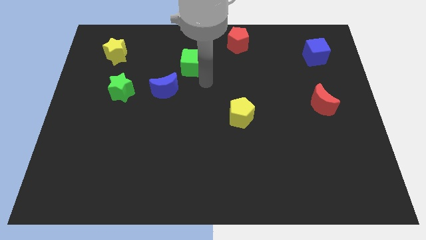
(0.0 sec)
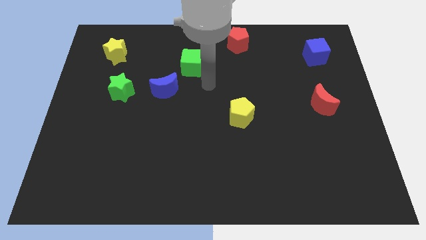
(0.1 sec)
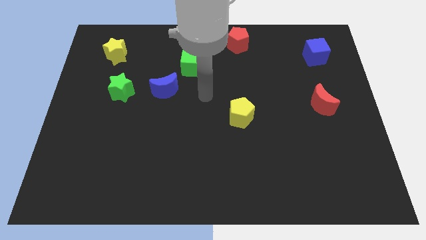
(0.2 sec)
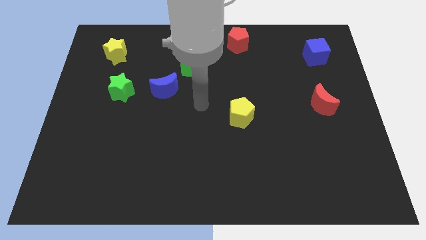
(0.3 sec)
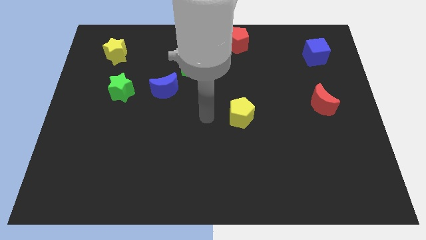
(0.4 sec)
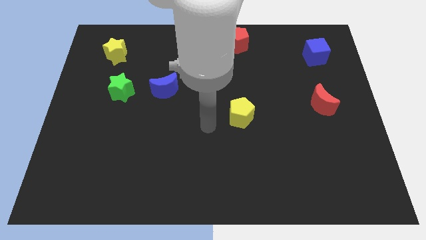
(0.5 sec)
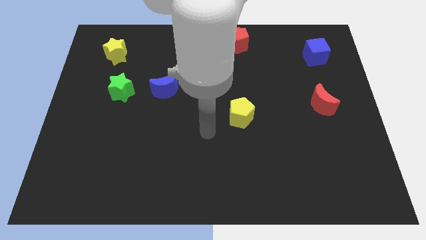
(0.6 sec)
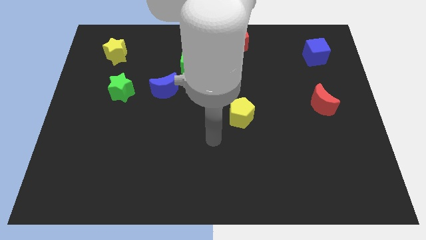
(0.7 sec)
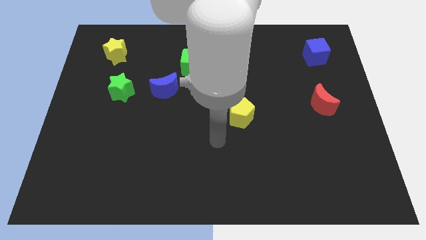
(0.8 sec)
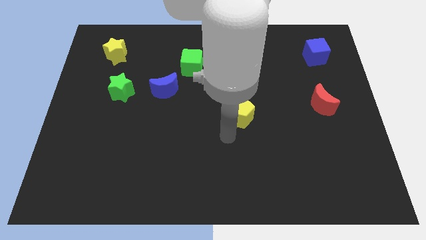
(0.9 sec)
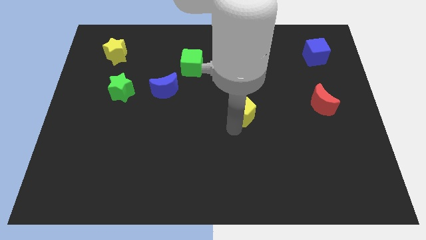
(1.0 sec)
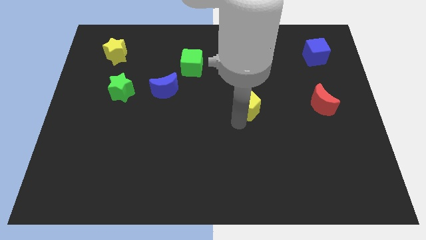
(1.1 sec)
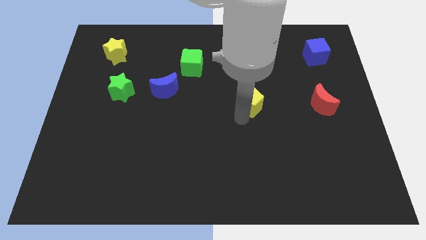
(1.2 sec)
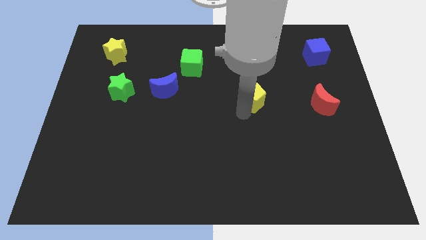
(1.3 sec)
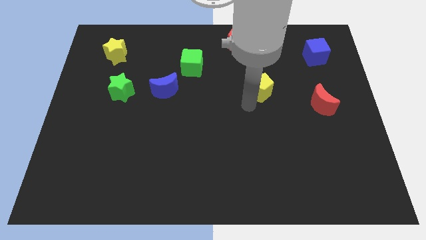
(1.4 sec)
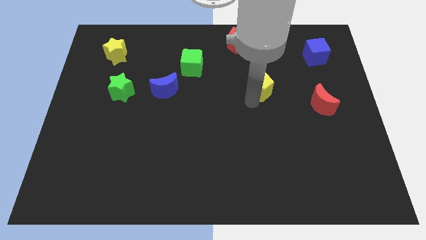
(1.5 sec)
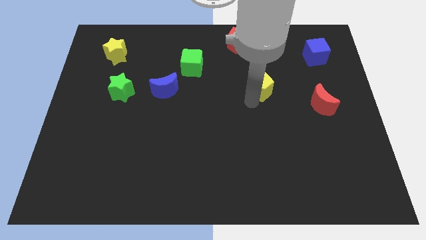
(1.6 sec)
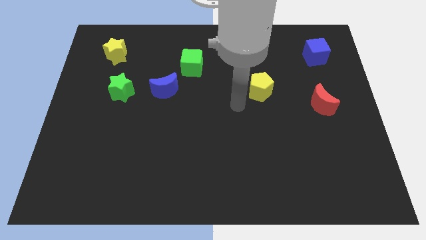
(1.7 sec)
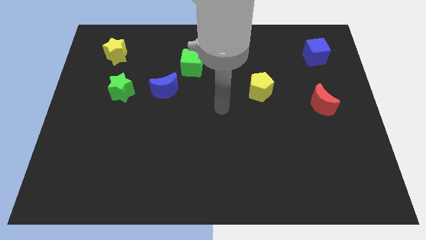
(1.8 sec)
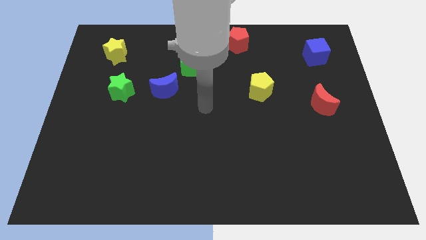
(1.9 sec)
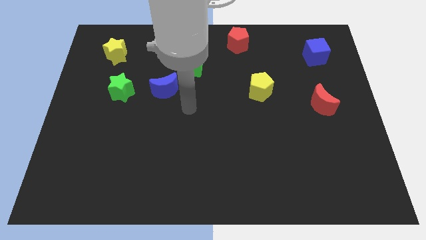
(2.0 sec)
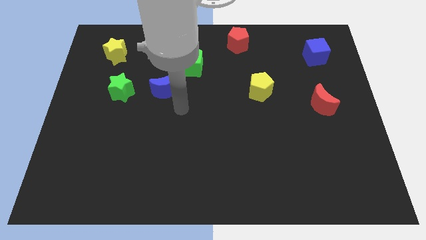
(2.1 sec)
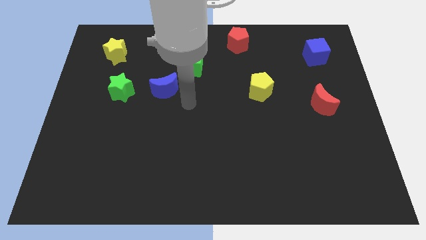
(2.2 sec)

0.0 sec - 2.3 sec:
put the yellow pentagon at the right of the blue crescent

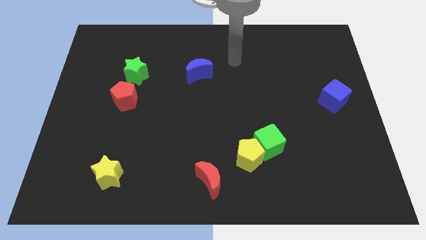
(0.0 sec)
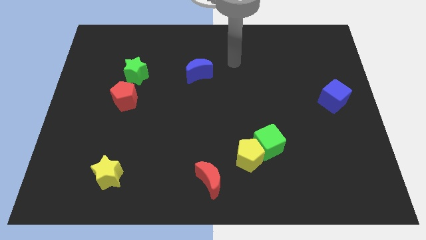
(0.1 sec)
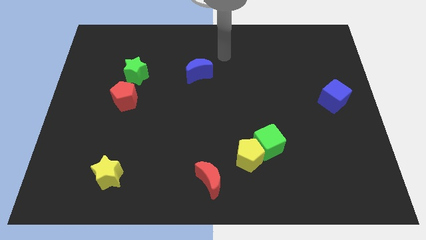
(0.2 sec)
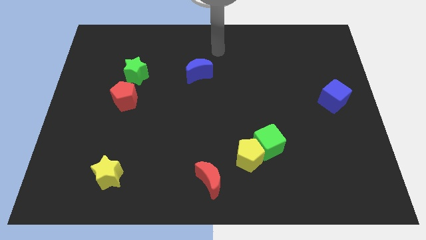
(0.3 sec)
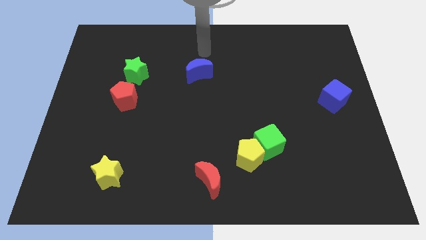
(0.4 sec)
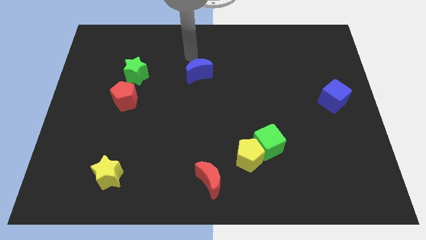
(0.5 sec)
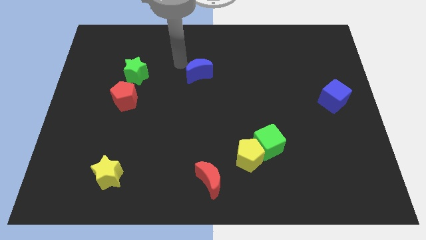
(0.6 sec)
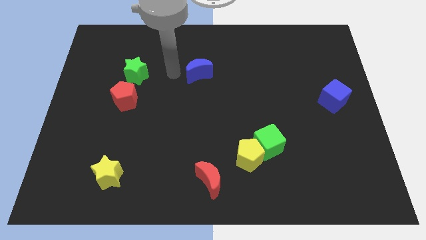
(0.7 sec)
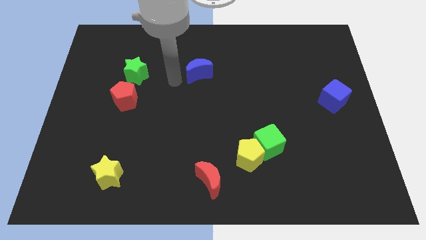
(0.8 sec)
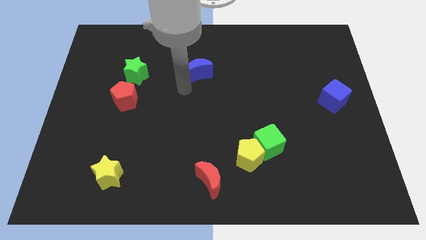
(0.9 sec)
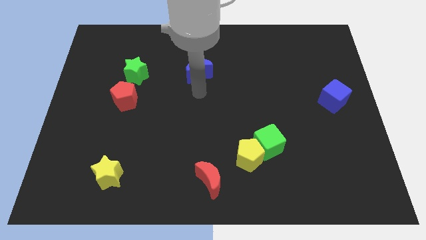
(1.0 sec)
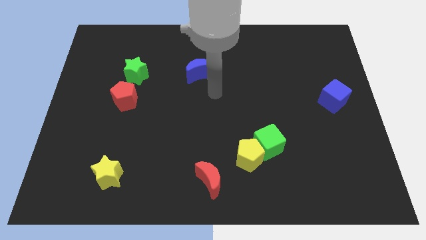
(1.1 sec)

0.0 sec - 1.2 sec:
place your arm below the blue moon

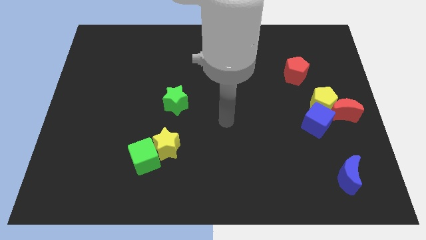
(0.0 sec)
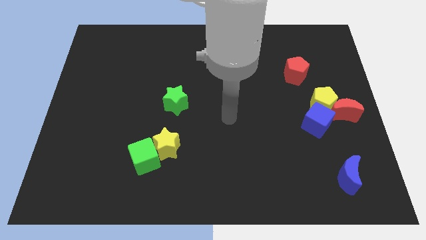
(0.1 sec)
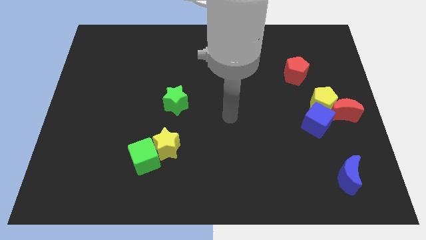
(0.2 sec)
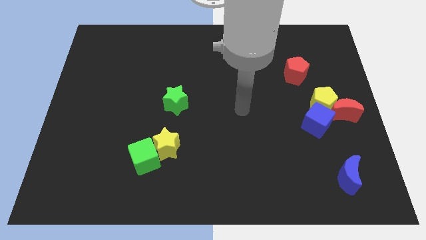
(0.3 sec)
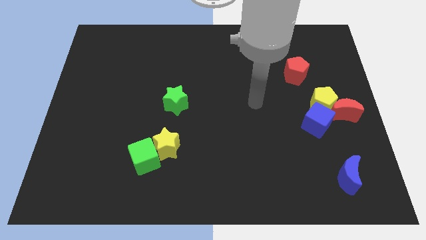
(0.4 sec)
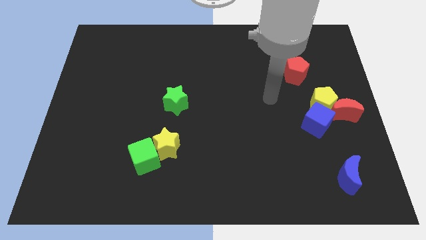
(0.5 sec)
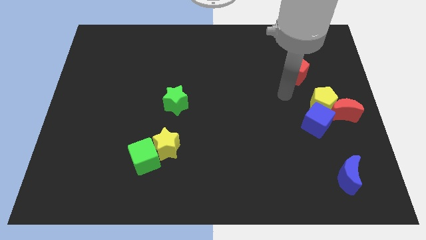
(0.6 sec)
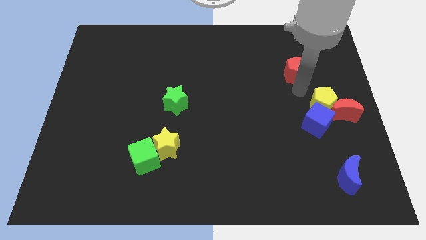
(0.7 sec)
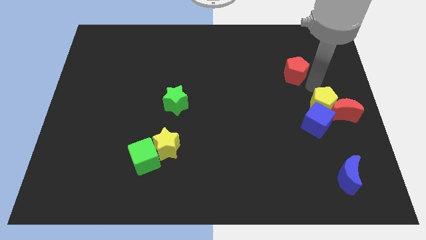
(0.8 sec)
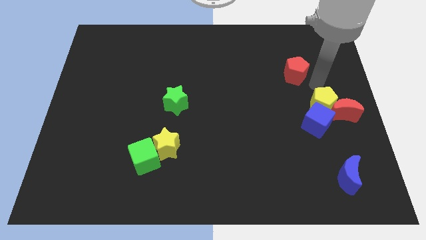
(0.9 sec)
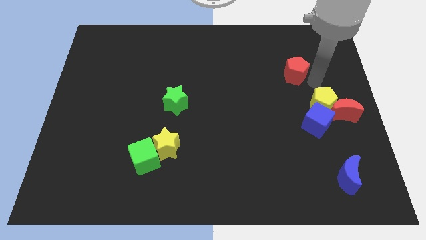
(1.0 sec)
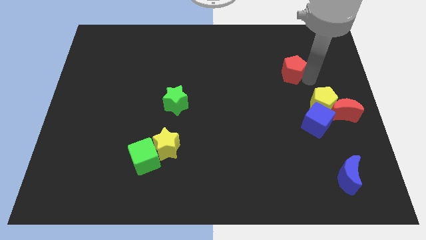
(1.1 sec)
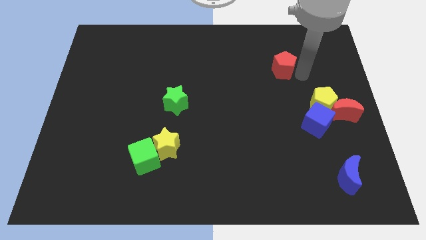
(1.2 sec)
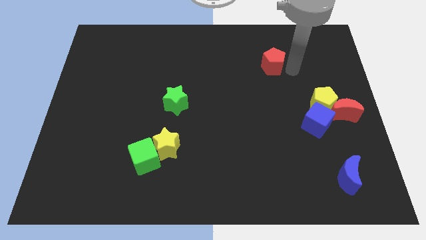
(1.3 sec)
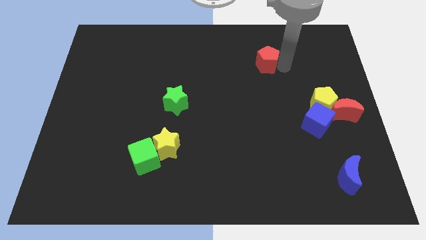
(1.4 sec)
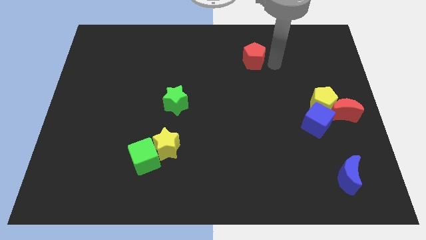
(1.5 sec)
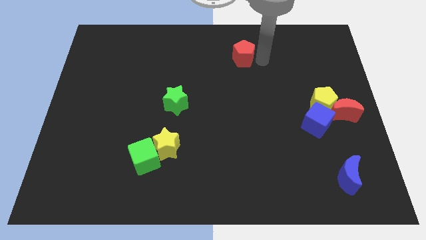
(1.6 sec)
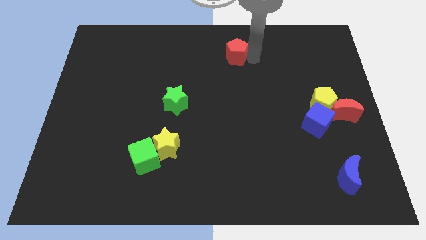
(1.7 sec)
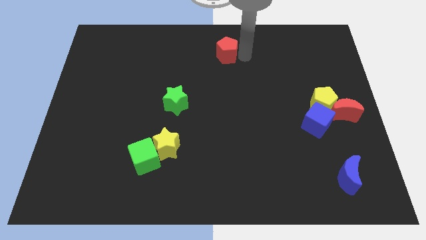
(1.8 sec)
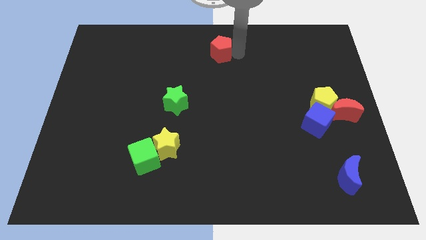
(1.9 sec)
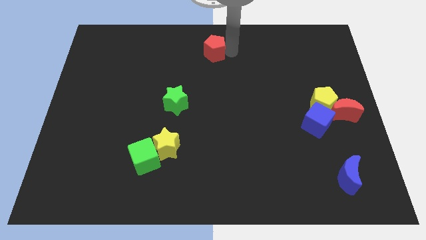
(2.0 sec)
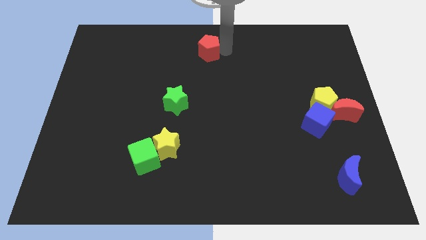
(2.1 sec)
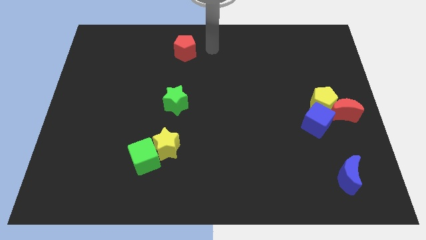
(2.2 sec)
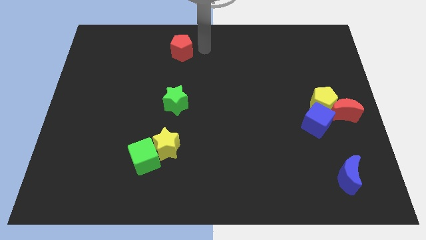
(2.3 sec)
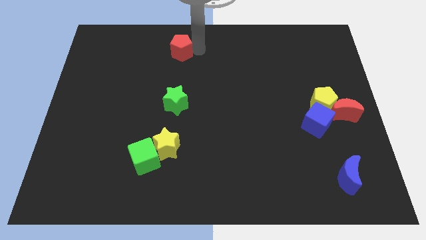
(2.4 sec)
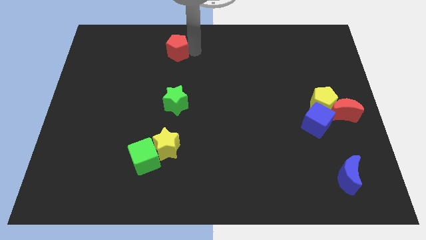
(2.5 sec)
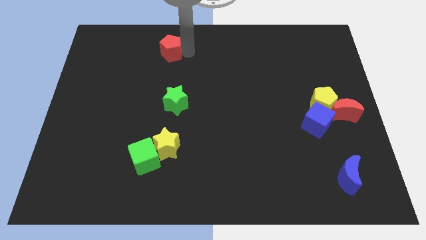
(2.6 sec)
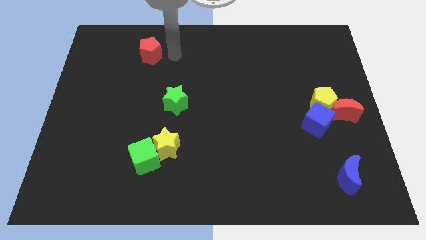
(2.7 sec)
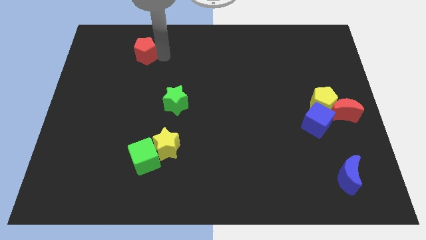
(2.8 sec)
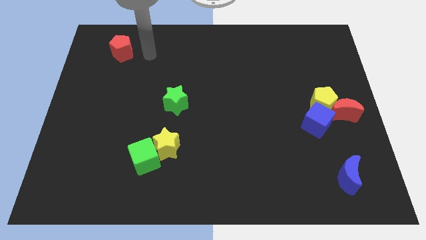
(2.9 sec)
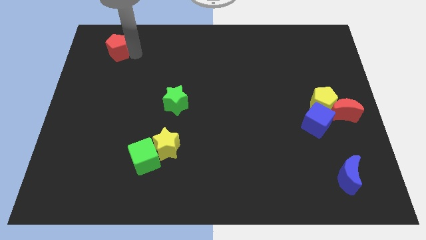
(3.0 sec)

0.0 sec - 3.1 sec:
slide red pentagon towards top left

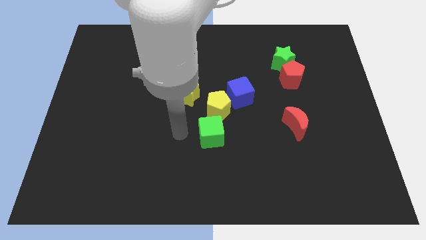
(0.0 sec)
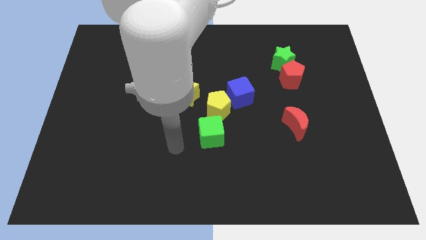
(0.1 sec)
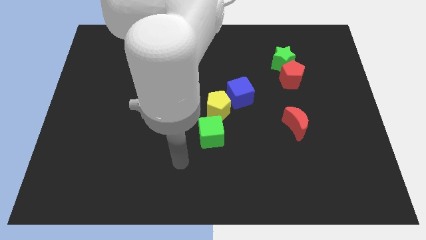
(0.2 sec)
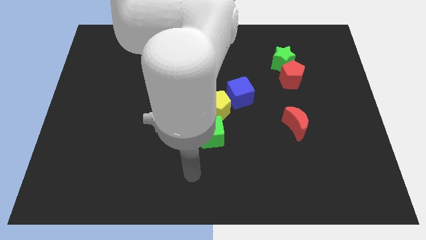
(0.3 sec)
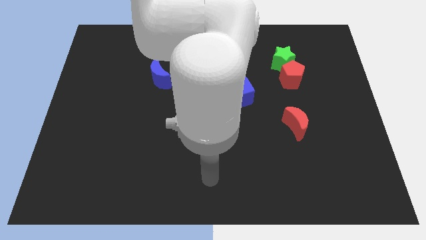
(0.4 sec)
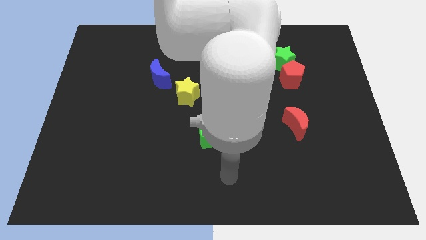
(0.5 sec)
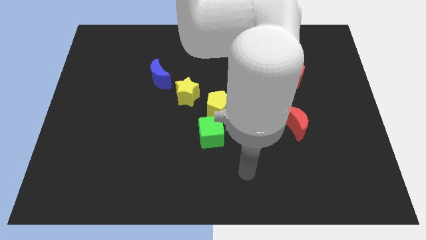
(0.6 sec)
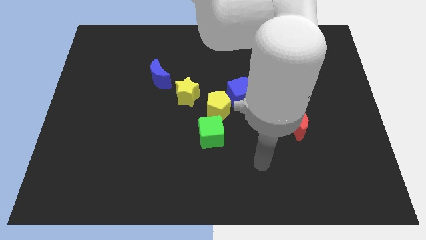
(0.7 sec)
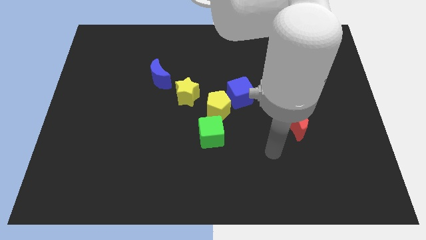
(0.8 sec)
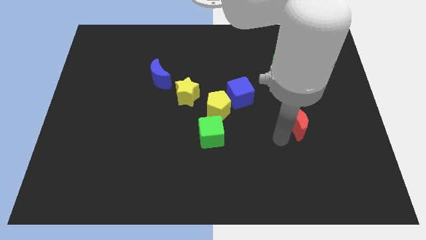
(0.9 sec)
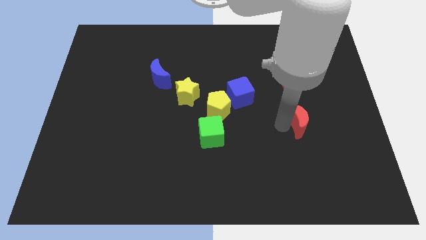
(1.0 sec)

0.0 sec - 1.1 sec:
place the arm left to the red moon

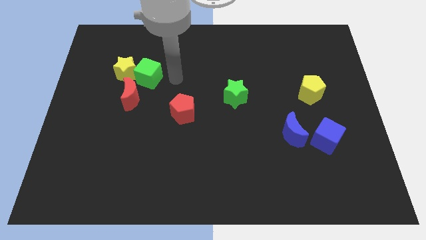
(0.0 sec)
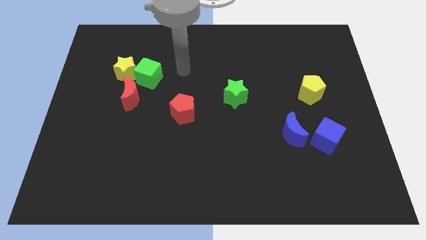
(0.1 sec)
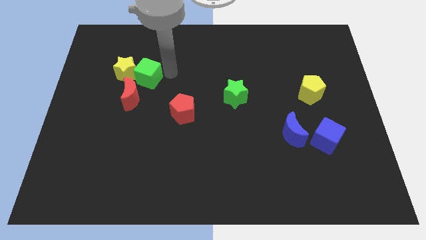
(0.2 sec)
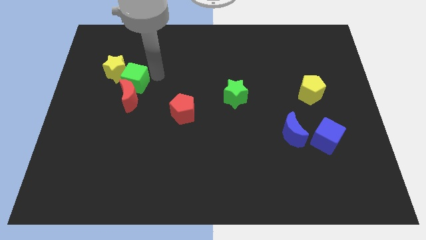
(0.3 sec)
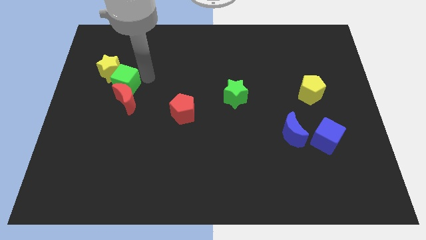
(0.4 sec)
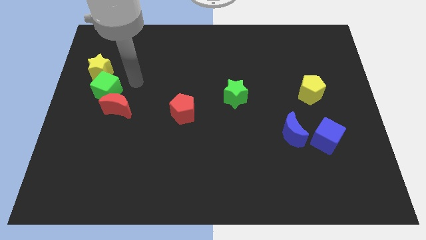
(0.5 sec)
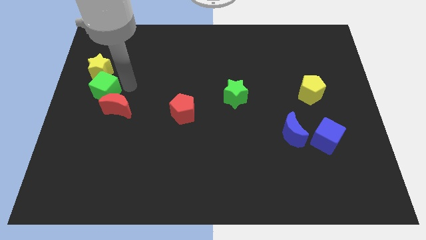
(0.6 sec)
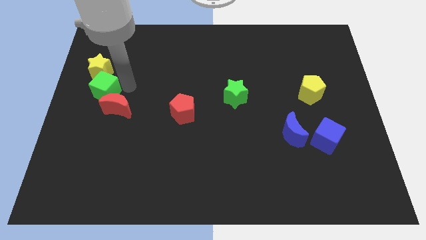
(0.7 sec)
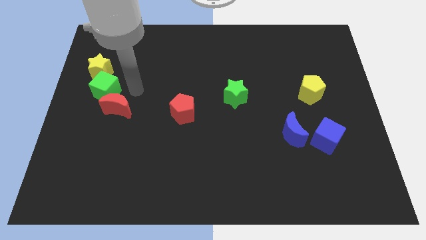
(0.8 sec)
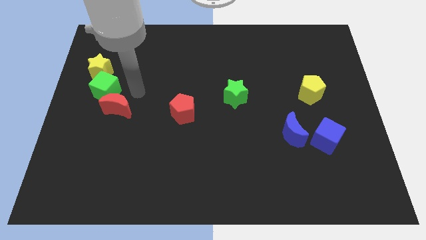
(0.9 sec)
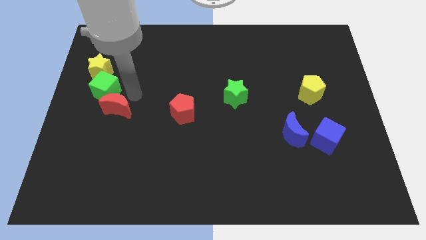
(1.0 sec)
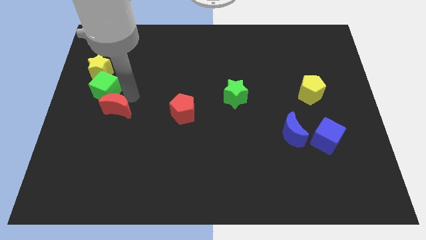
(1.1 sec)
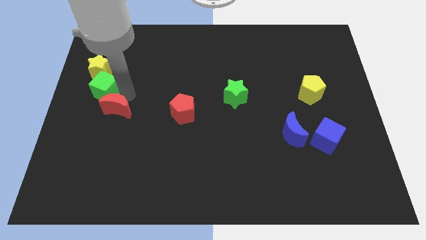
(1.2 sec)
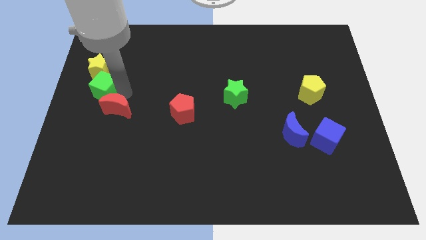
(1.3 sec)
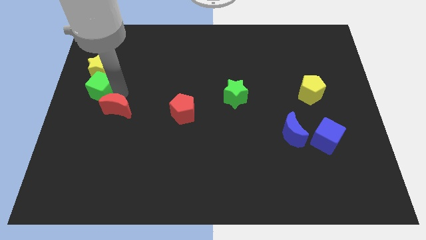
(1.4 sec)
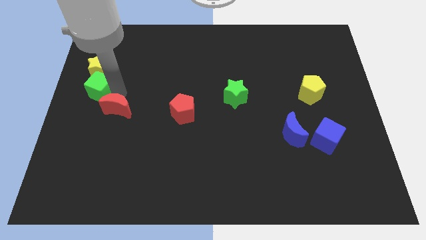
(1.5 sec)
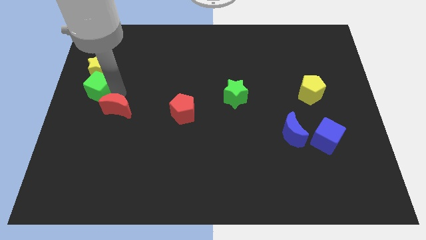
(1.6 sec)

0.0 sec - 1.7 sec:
push the green cube to the bottom of the yellow star
